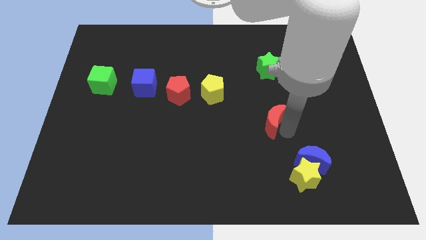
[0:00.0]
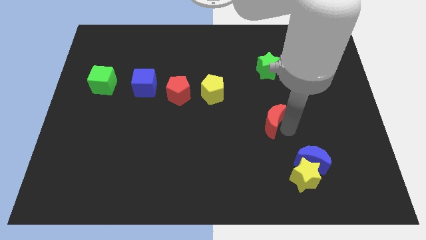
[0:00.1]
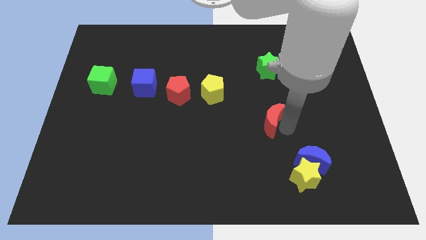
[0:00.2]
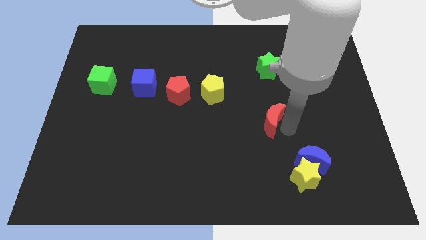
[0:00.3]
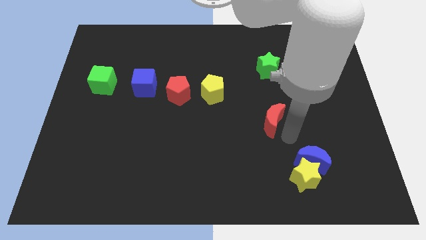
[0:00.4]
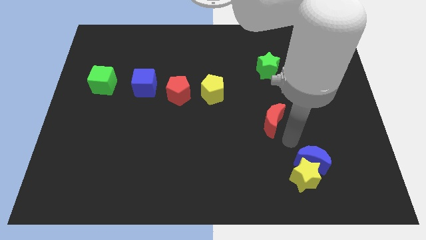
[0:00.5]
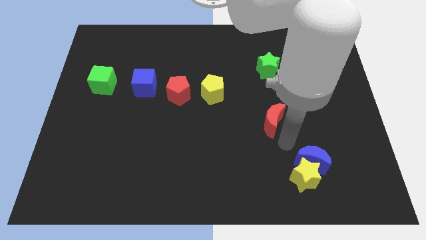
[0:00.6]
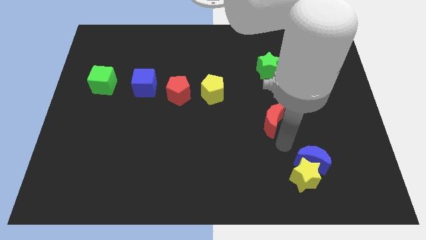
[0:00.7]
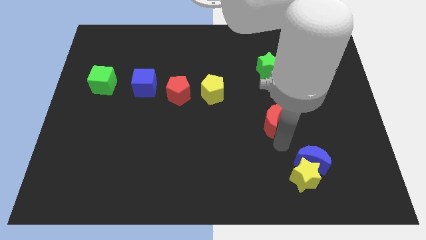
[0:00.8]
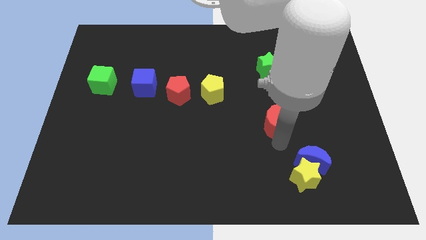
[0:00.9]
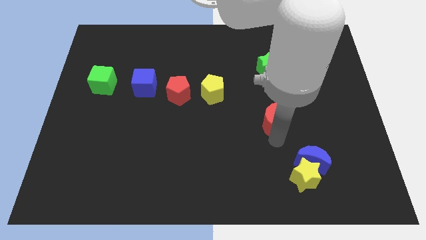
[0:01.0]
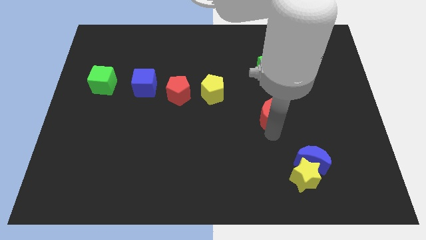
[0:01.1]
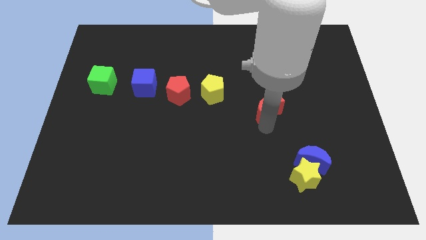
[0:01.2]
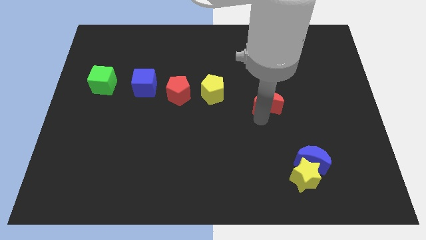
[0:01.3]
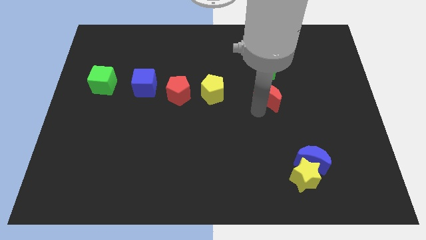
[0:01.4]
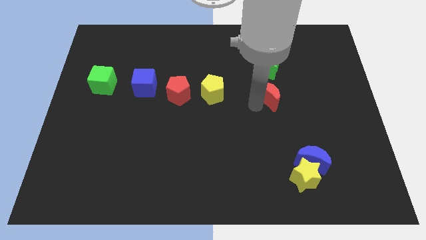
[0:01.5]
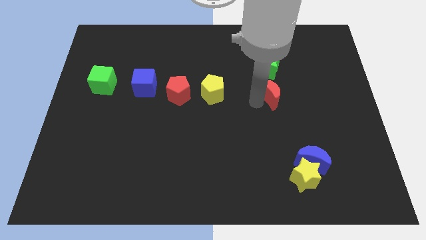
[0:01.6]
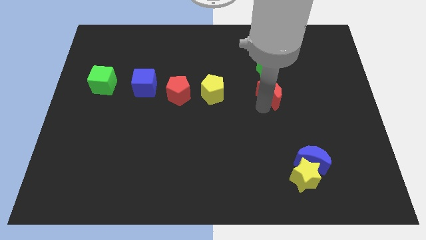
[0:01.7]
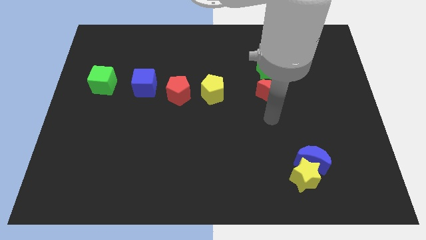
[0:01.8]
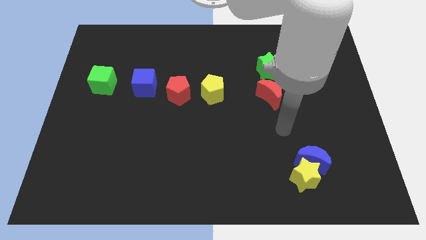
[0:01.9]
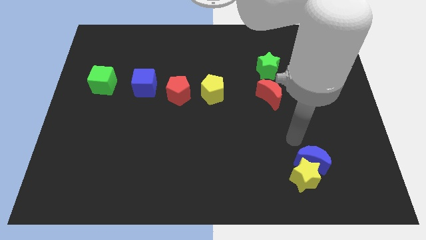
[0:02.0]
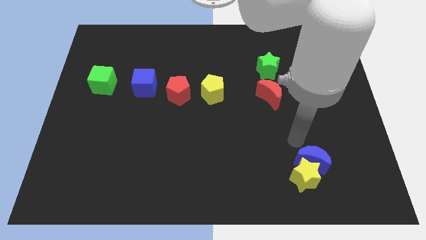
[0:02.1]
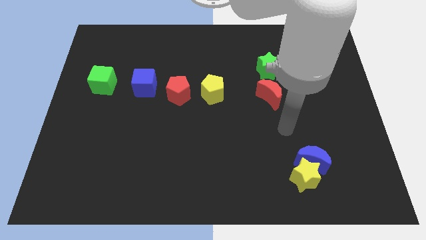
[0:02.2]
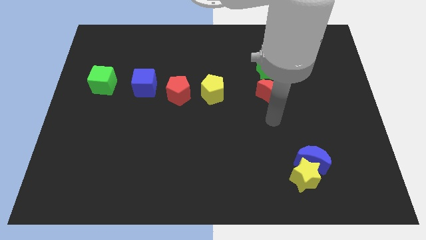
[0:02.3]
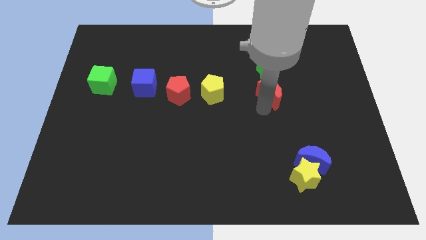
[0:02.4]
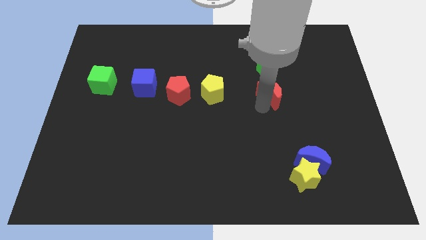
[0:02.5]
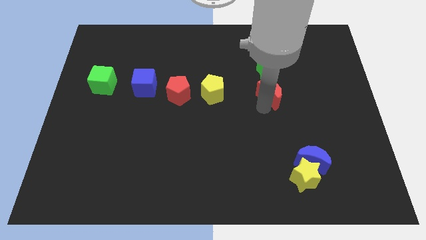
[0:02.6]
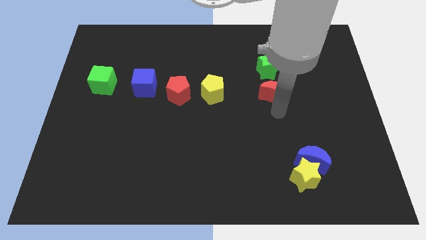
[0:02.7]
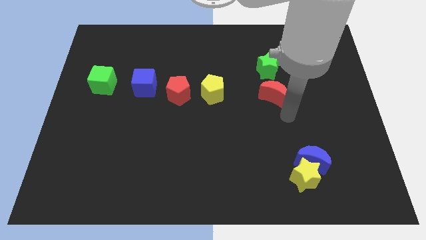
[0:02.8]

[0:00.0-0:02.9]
move the red crescent bottom to the green star

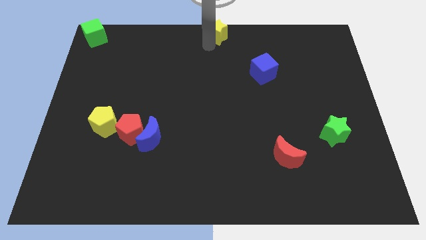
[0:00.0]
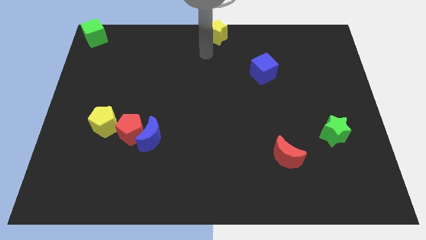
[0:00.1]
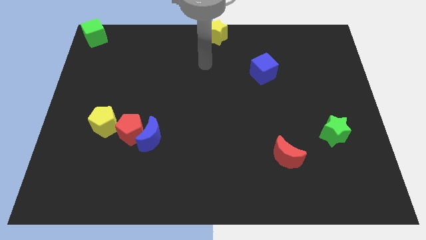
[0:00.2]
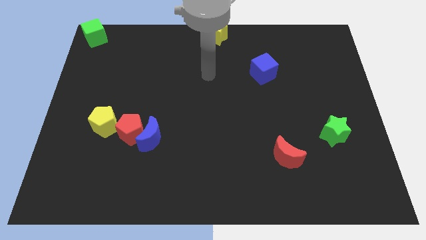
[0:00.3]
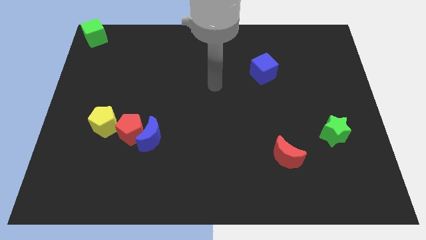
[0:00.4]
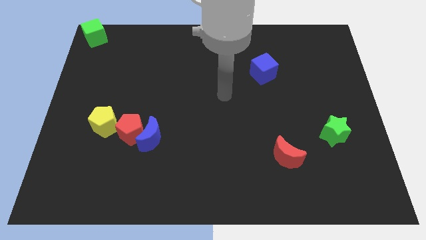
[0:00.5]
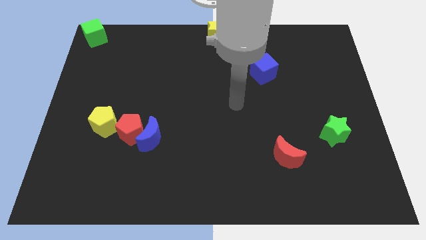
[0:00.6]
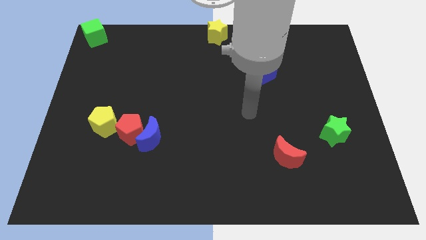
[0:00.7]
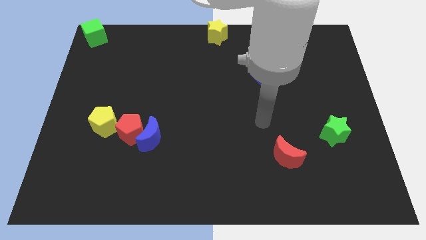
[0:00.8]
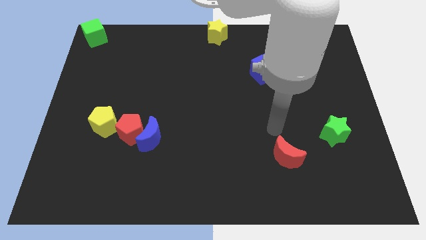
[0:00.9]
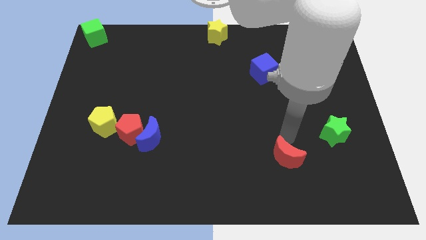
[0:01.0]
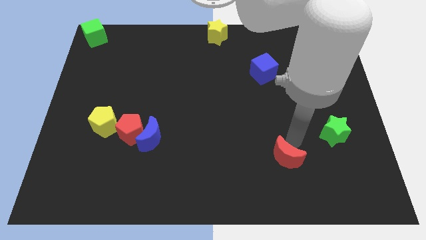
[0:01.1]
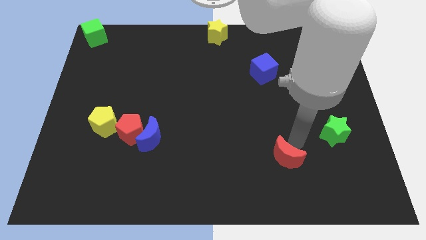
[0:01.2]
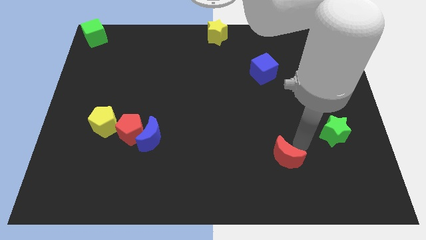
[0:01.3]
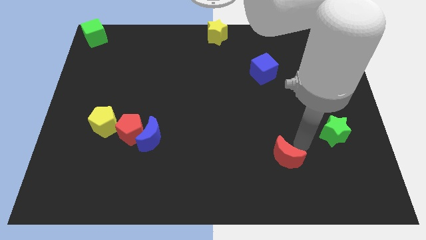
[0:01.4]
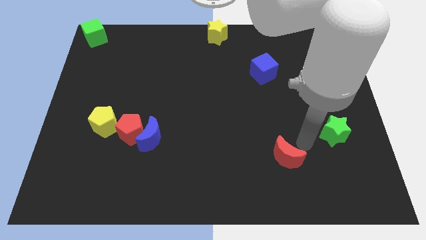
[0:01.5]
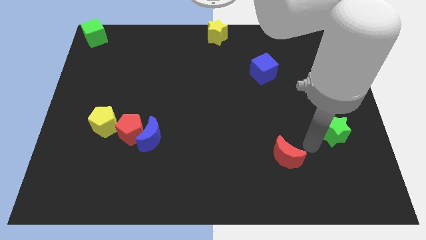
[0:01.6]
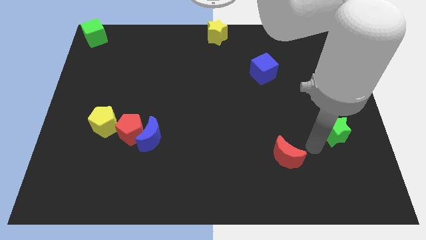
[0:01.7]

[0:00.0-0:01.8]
put your arm in between the red moon and green star

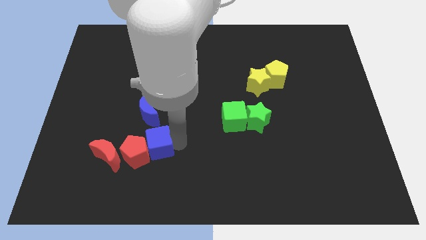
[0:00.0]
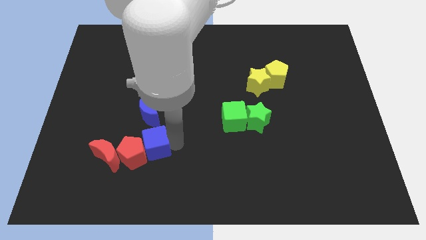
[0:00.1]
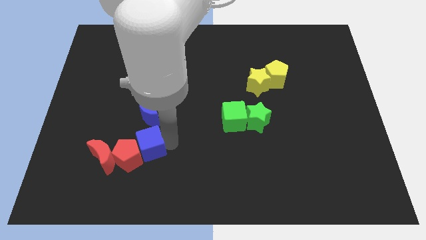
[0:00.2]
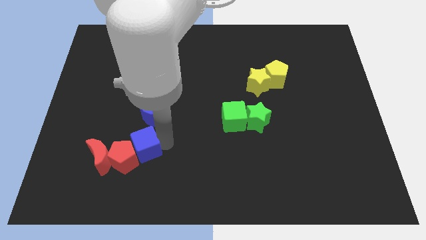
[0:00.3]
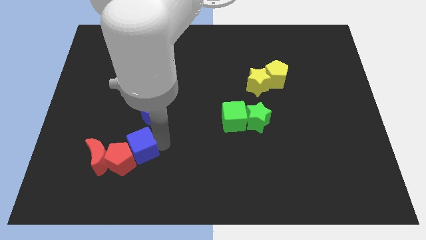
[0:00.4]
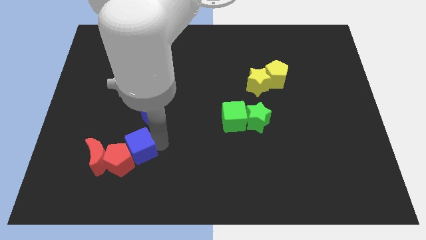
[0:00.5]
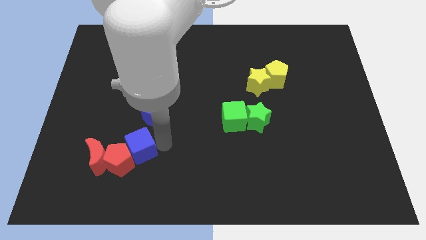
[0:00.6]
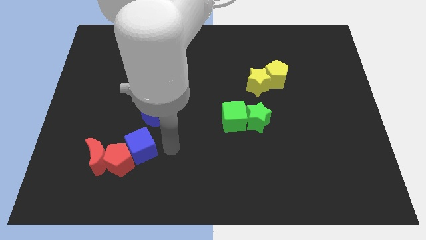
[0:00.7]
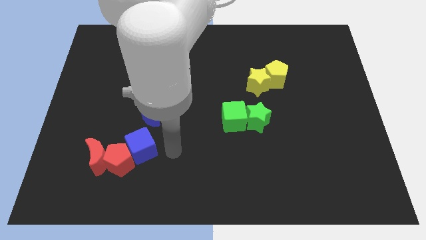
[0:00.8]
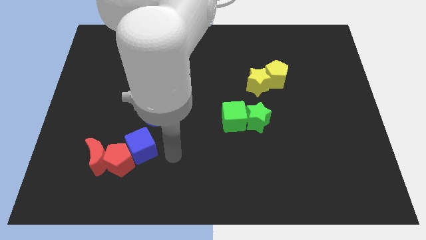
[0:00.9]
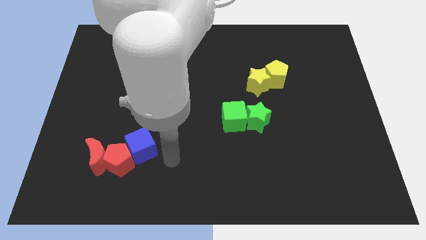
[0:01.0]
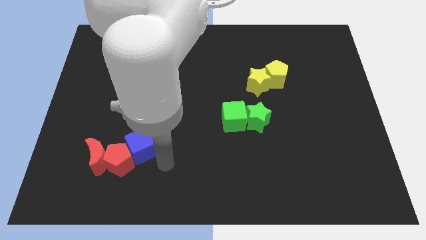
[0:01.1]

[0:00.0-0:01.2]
moving the group of objects towards the bottom left

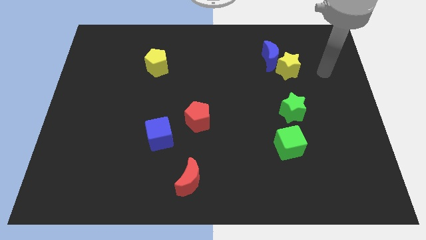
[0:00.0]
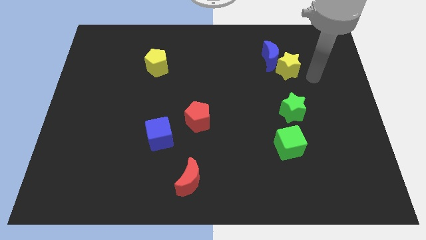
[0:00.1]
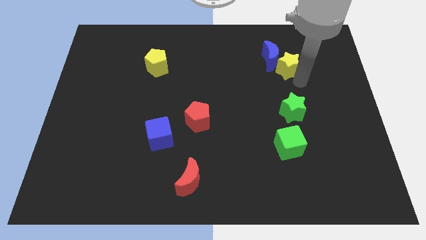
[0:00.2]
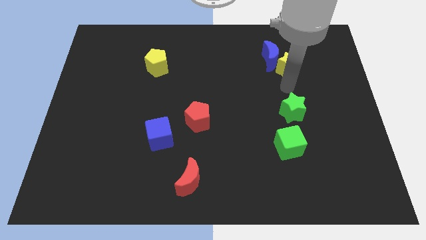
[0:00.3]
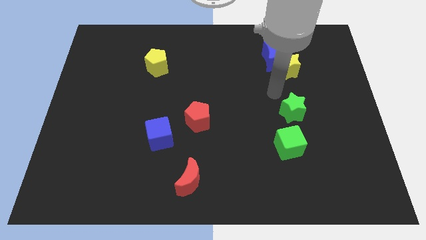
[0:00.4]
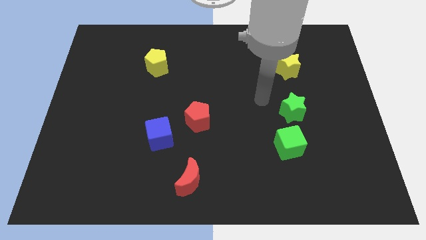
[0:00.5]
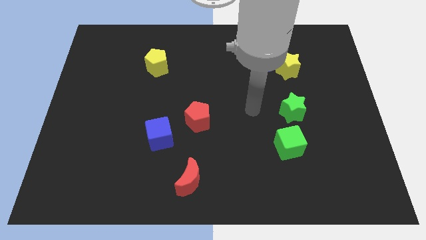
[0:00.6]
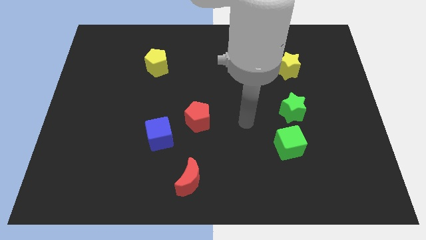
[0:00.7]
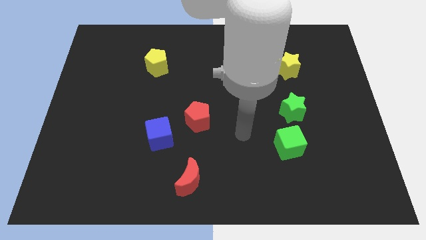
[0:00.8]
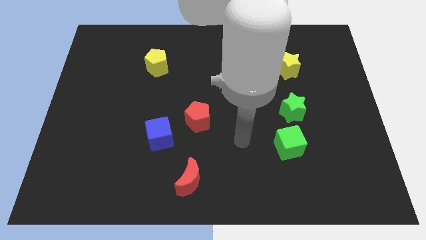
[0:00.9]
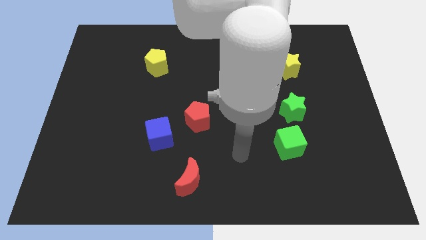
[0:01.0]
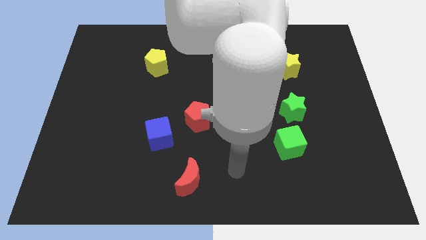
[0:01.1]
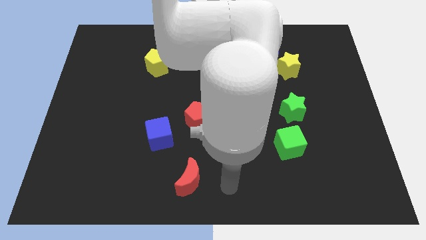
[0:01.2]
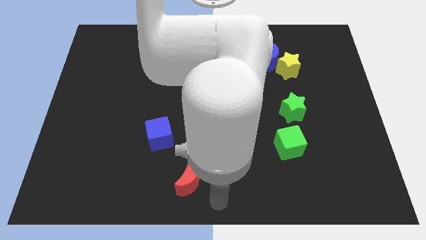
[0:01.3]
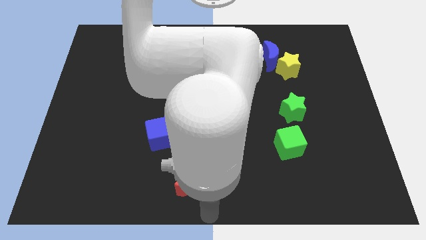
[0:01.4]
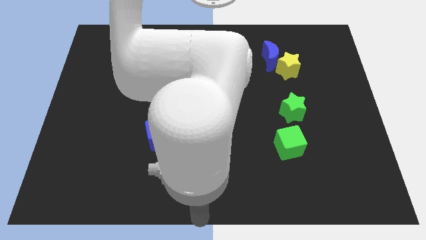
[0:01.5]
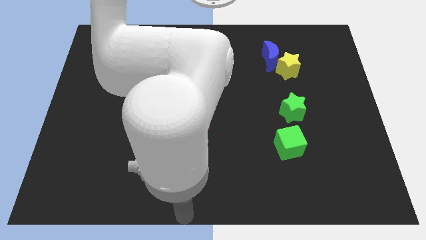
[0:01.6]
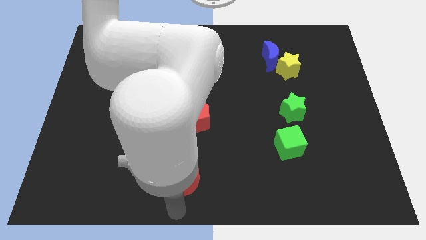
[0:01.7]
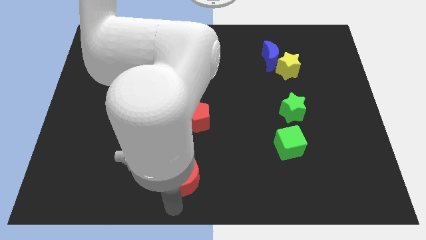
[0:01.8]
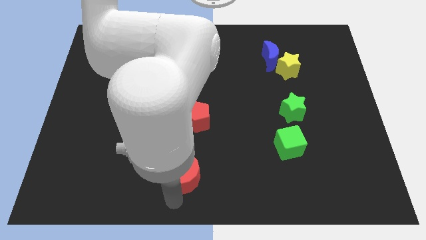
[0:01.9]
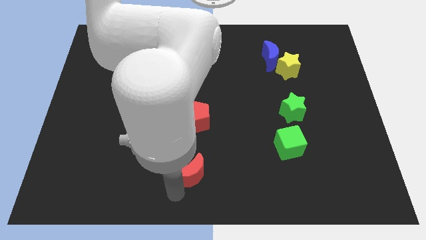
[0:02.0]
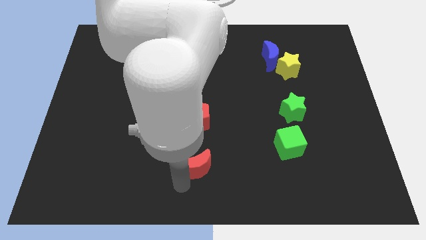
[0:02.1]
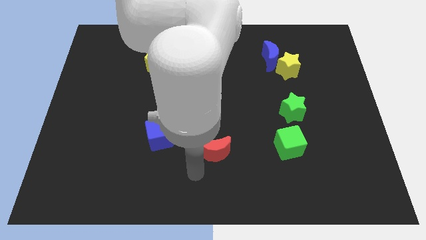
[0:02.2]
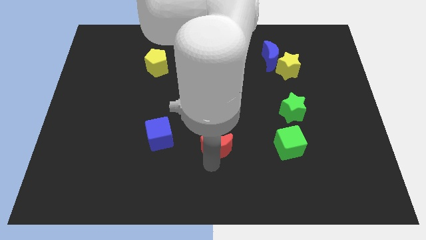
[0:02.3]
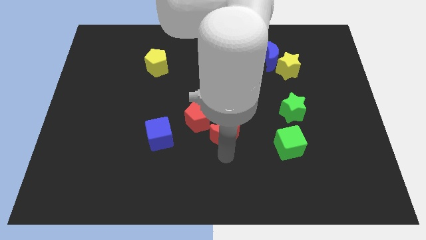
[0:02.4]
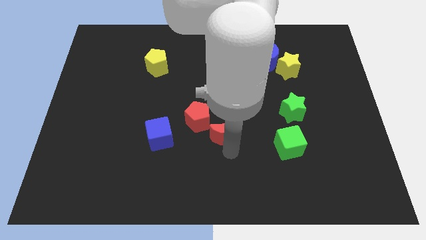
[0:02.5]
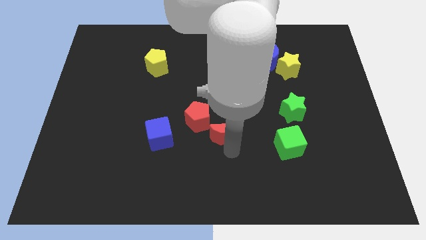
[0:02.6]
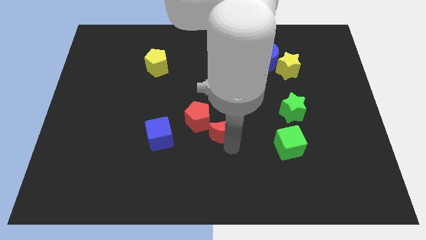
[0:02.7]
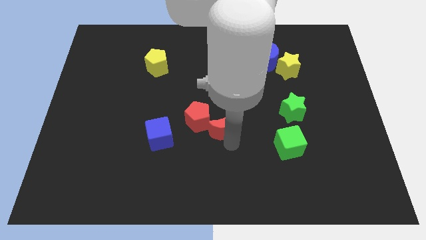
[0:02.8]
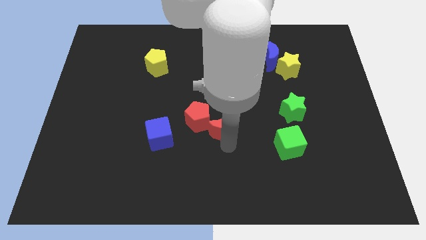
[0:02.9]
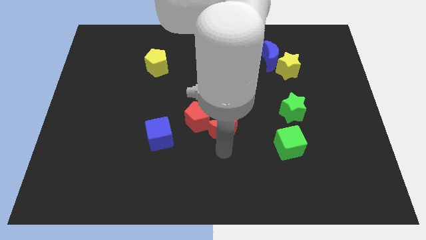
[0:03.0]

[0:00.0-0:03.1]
place the red moon to the bottom right side of the red pentagon
